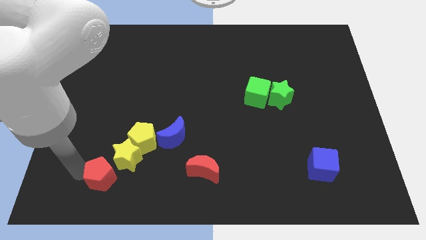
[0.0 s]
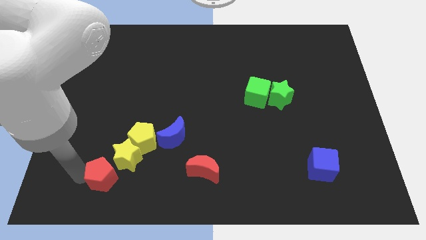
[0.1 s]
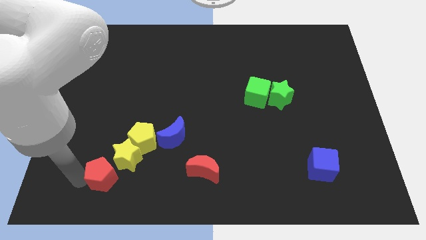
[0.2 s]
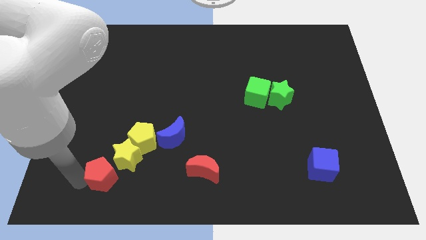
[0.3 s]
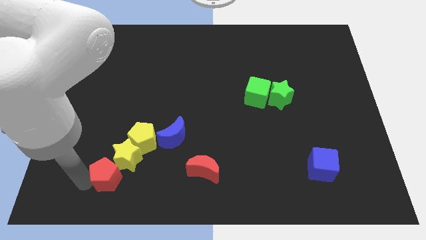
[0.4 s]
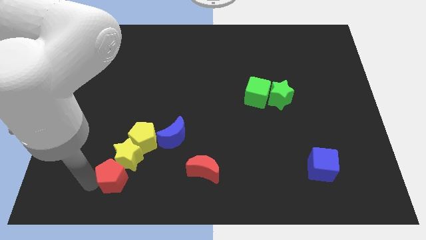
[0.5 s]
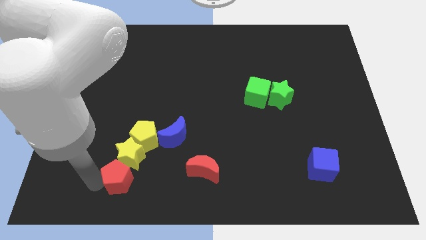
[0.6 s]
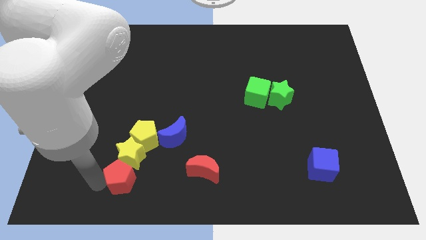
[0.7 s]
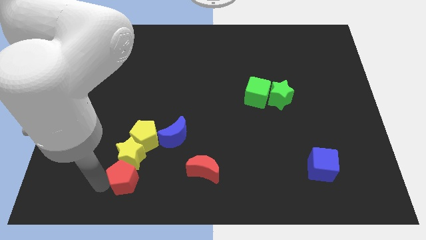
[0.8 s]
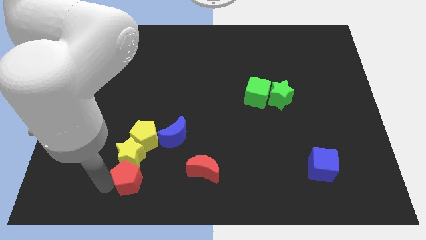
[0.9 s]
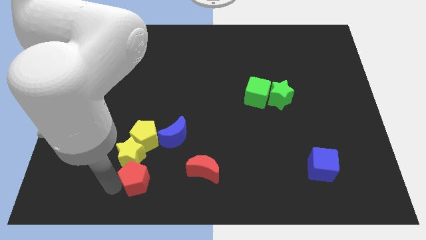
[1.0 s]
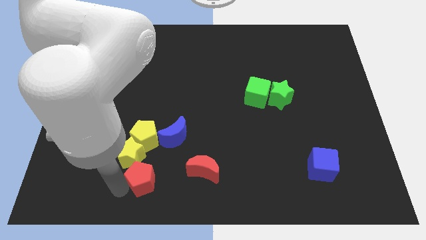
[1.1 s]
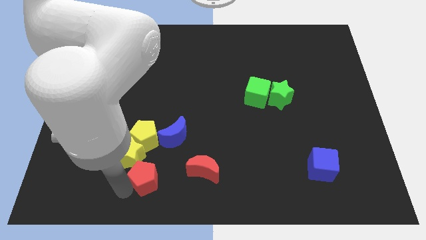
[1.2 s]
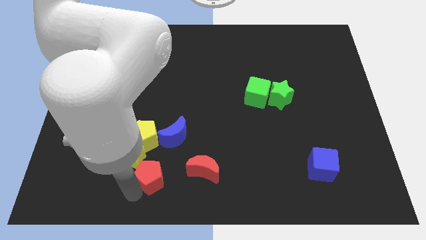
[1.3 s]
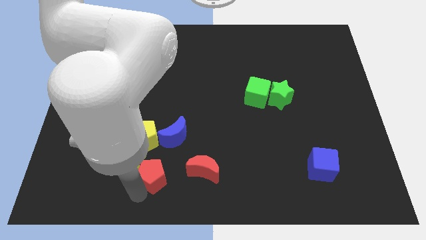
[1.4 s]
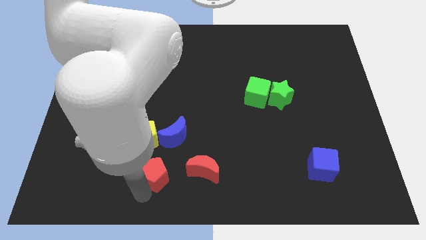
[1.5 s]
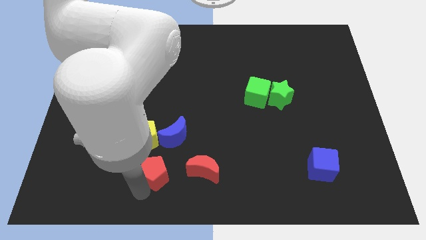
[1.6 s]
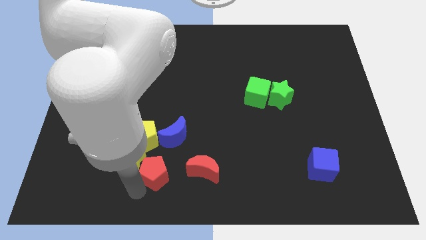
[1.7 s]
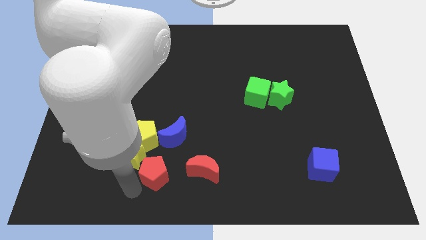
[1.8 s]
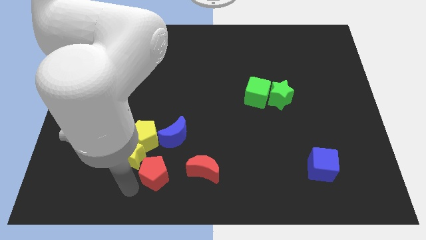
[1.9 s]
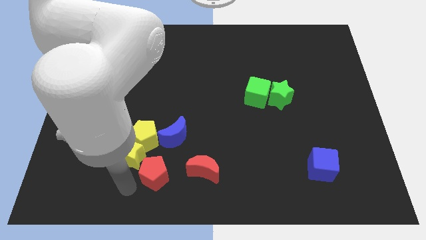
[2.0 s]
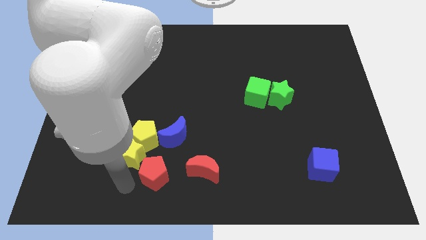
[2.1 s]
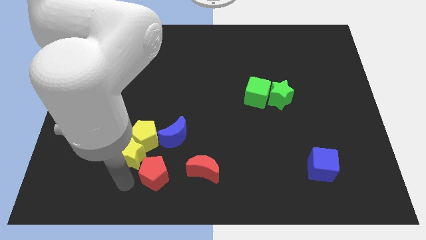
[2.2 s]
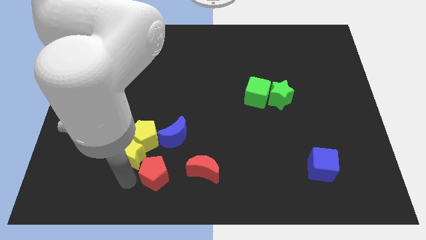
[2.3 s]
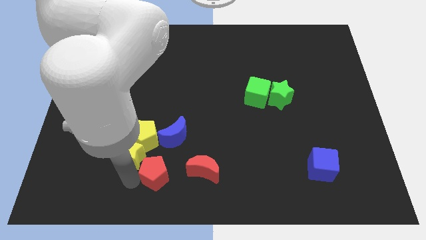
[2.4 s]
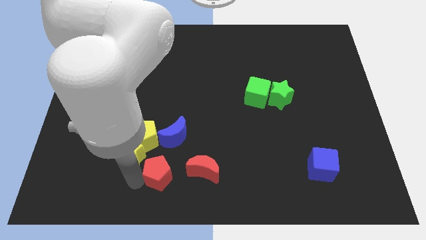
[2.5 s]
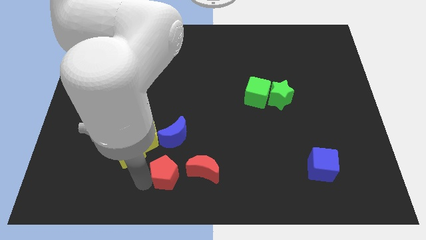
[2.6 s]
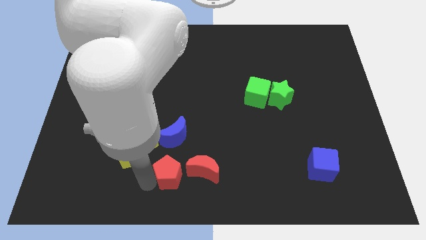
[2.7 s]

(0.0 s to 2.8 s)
place the red pentagon diagonal to the yellow star

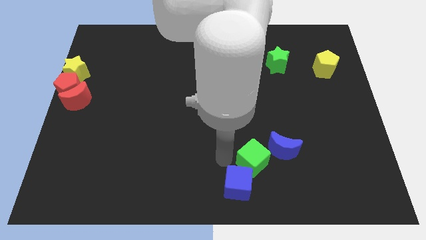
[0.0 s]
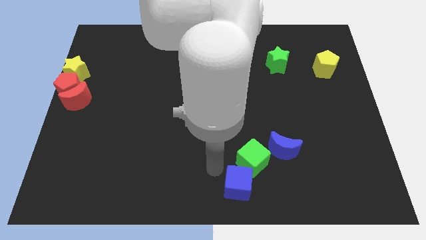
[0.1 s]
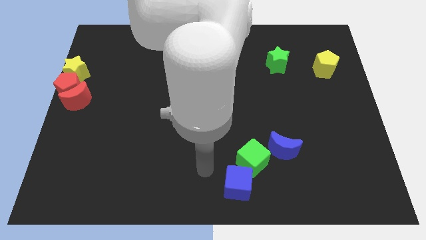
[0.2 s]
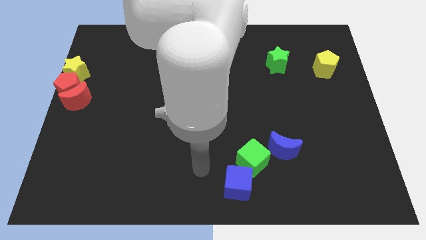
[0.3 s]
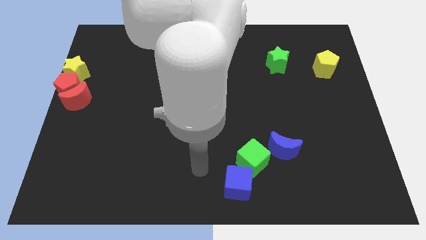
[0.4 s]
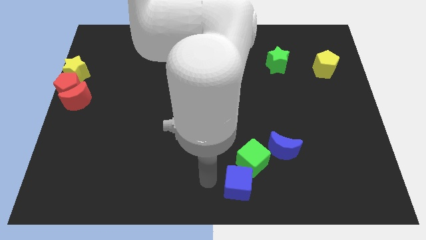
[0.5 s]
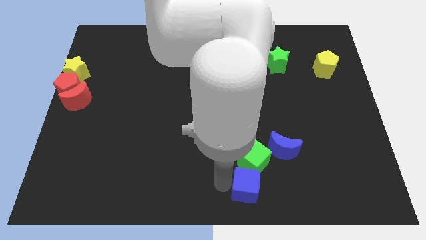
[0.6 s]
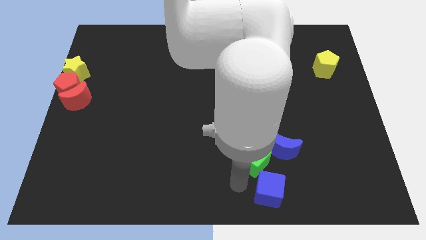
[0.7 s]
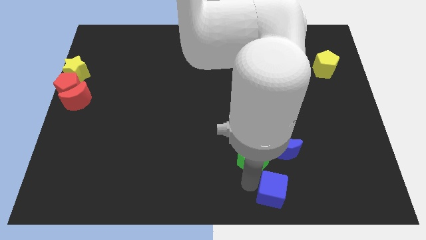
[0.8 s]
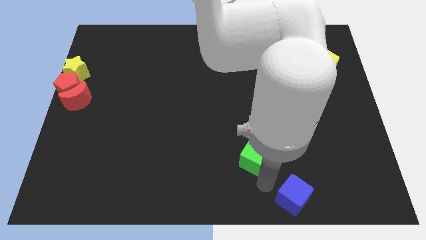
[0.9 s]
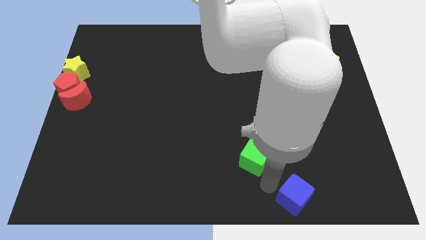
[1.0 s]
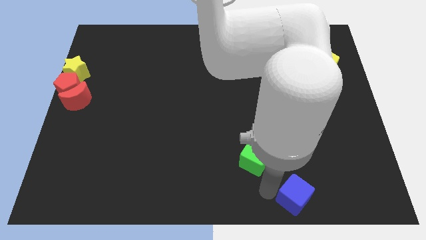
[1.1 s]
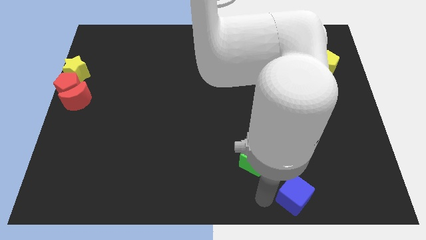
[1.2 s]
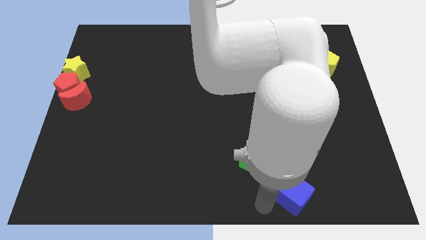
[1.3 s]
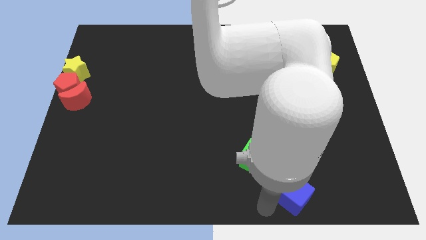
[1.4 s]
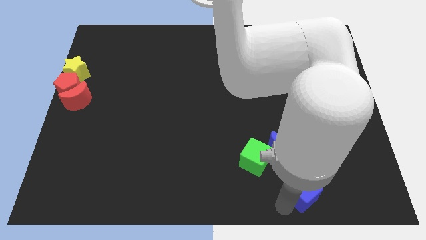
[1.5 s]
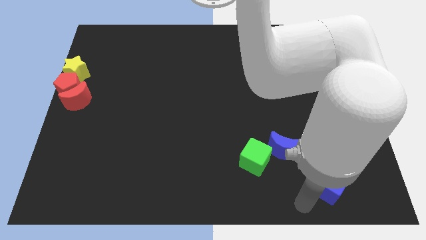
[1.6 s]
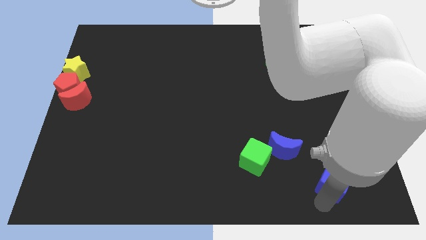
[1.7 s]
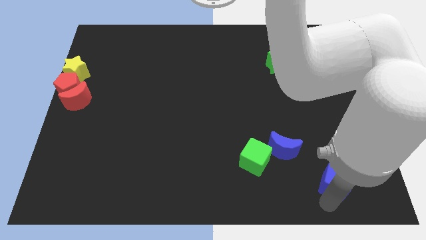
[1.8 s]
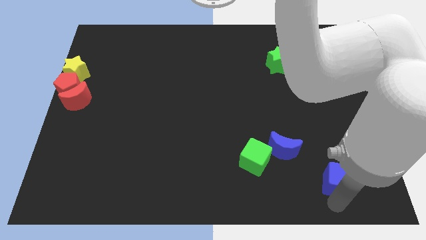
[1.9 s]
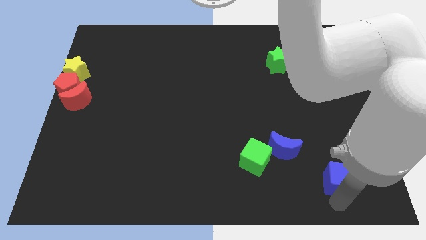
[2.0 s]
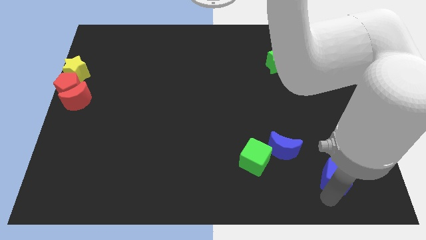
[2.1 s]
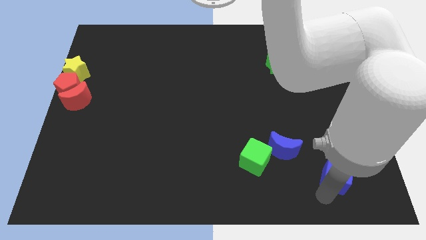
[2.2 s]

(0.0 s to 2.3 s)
separate the blue cube from green cube

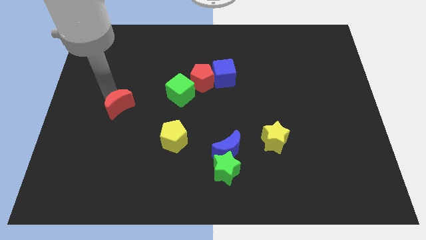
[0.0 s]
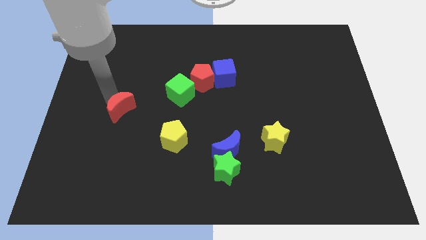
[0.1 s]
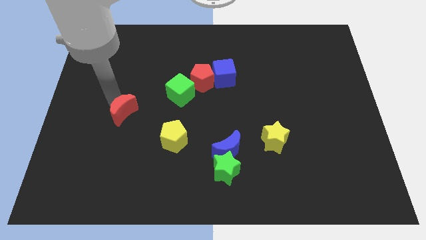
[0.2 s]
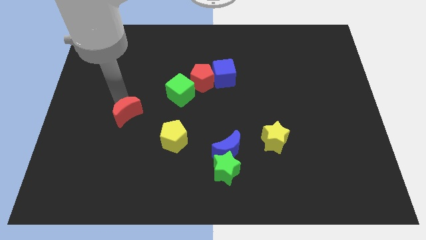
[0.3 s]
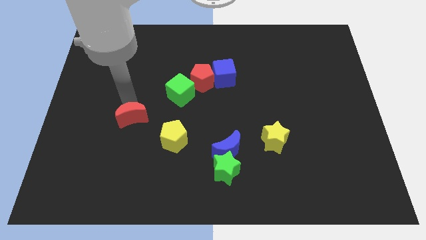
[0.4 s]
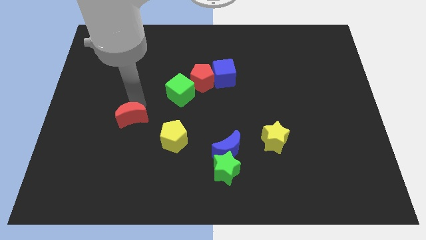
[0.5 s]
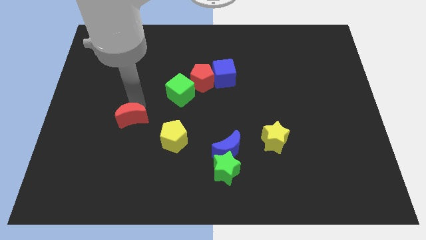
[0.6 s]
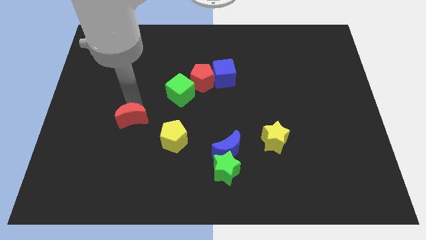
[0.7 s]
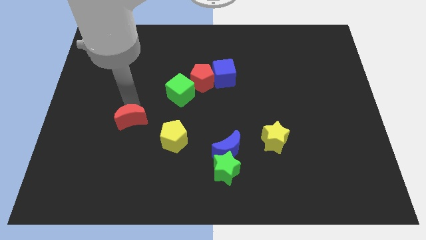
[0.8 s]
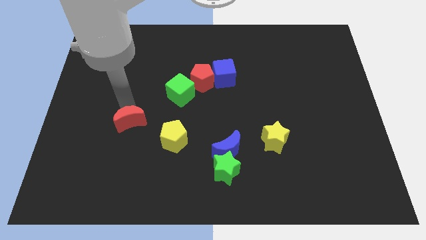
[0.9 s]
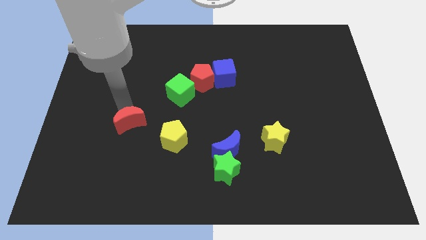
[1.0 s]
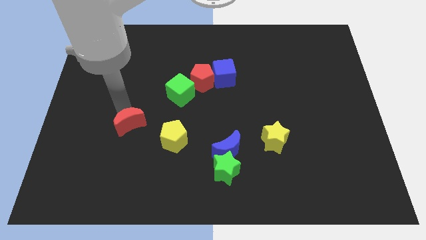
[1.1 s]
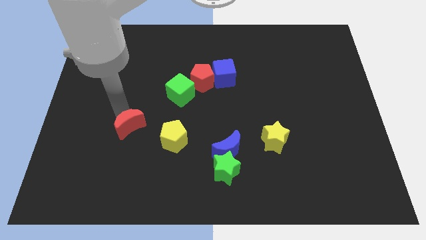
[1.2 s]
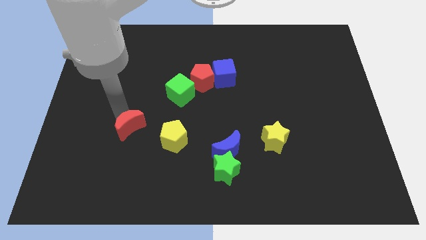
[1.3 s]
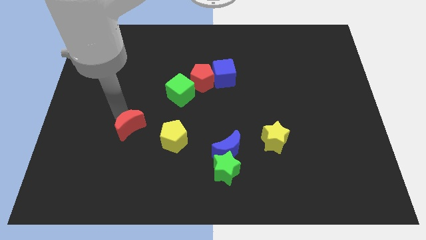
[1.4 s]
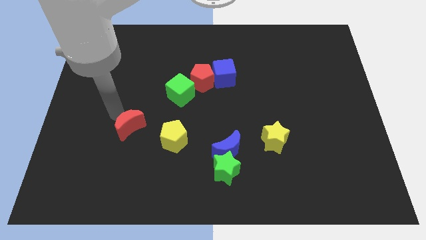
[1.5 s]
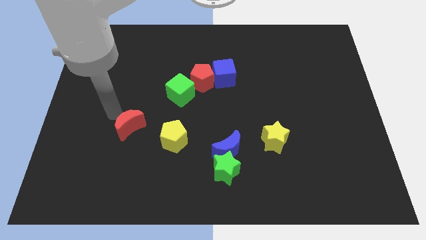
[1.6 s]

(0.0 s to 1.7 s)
push the red crescent towards the yellow pentagon

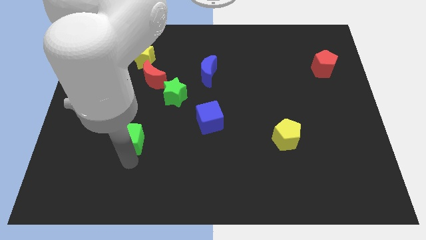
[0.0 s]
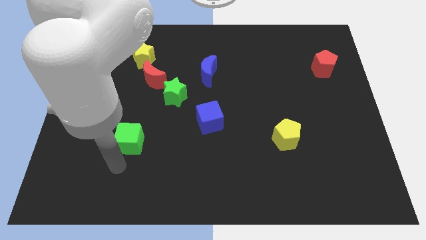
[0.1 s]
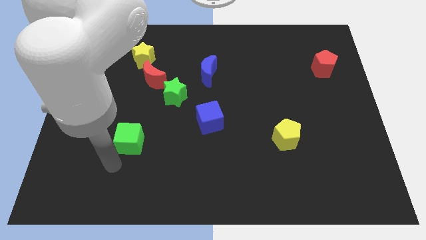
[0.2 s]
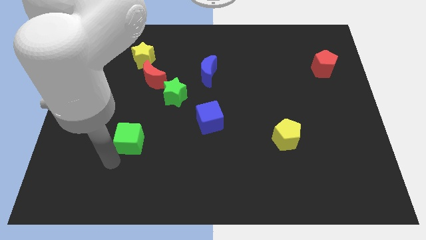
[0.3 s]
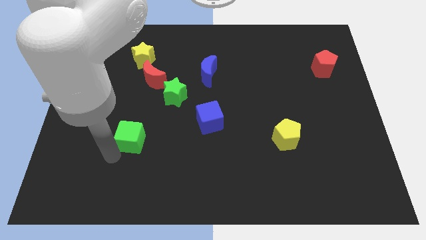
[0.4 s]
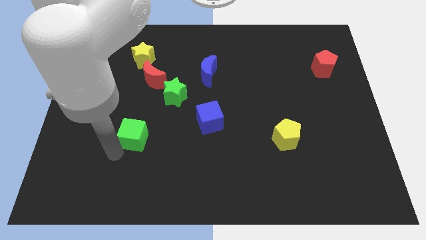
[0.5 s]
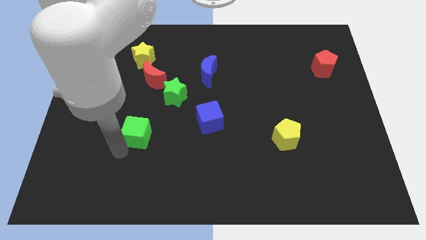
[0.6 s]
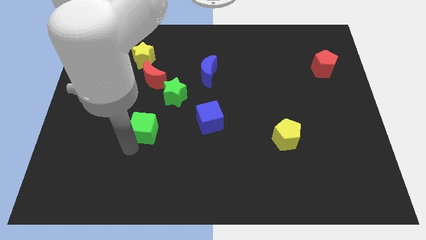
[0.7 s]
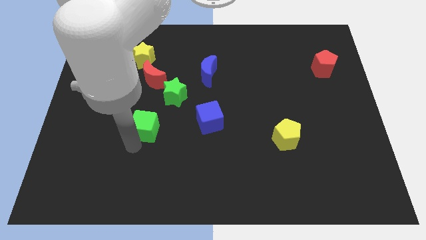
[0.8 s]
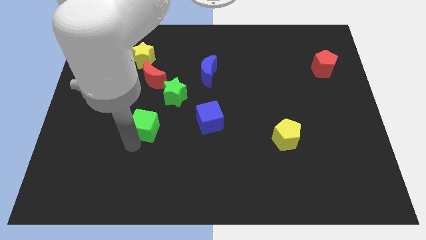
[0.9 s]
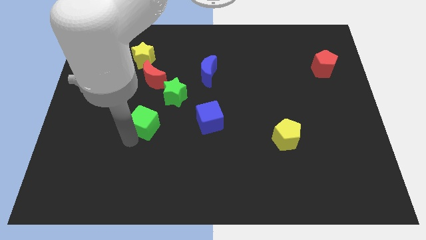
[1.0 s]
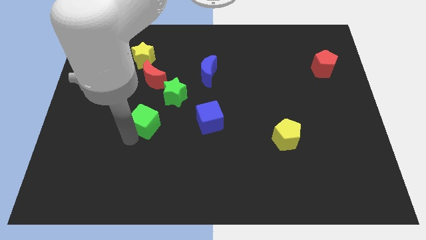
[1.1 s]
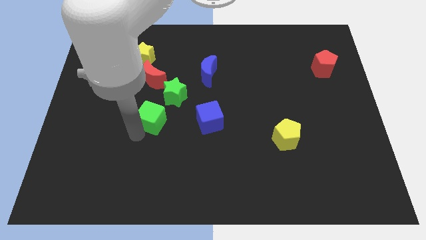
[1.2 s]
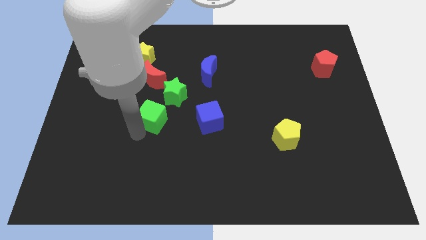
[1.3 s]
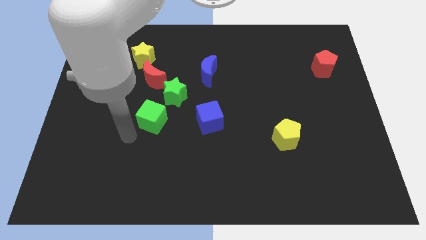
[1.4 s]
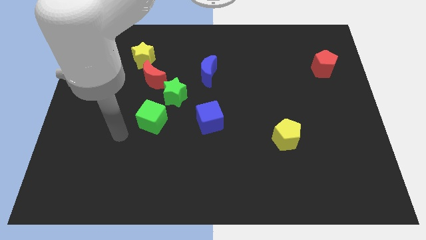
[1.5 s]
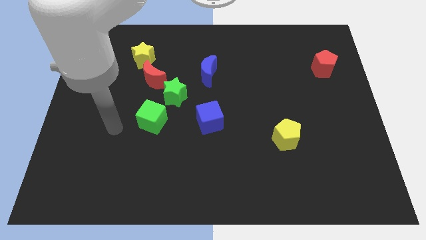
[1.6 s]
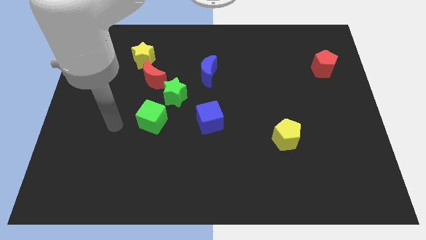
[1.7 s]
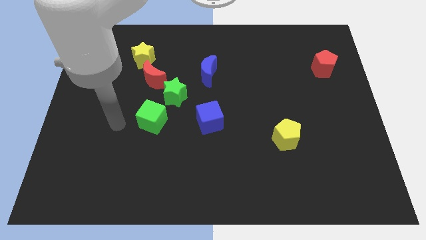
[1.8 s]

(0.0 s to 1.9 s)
put the green star to the left side of the blue cube

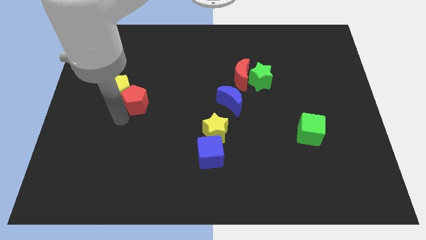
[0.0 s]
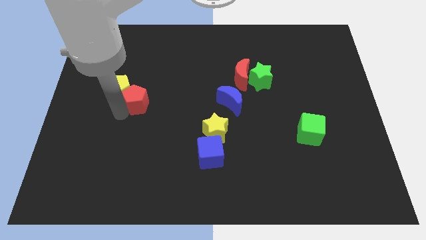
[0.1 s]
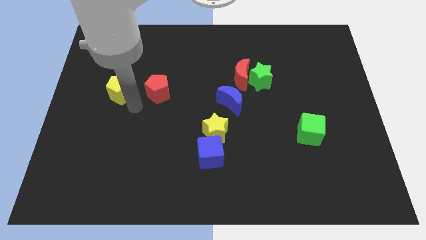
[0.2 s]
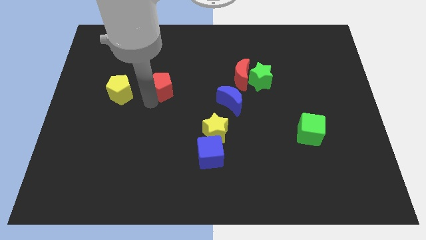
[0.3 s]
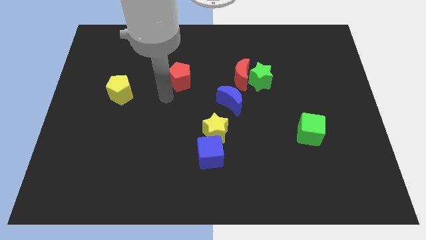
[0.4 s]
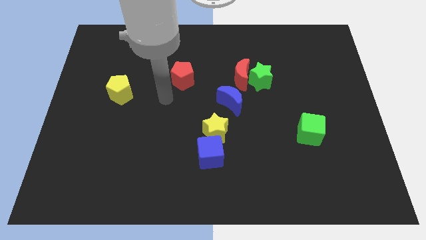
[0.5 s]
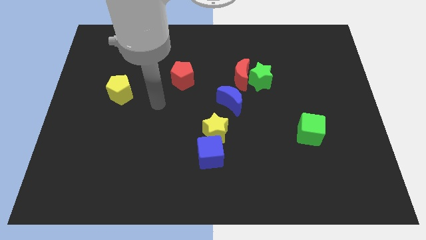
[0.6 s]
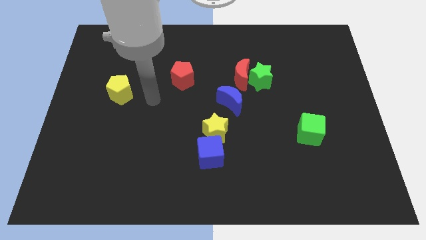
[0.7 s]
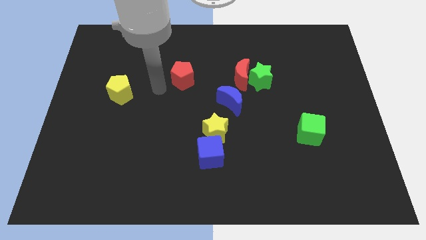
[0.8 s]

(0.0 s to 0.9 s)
separate the red pentagon from the yellow pentagon
